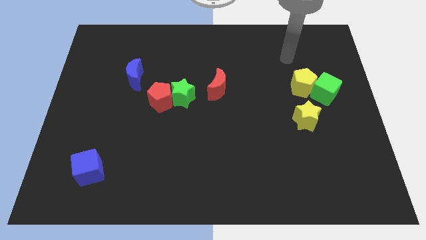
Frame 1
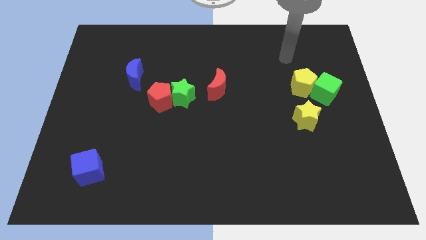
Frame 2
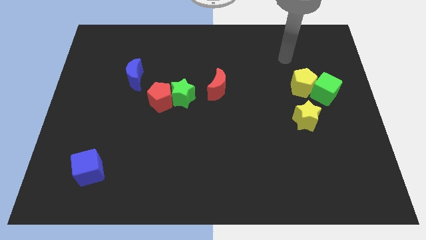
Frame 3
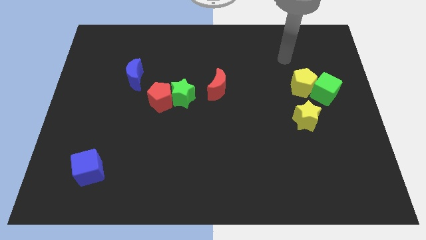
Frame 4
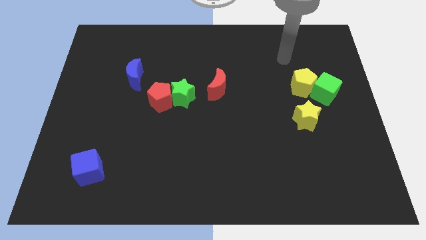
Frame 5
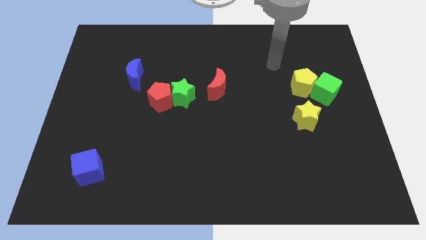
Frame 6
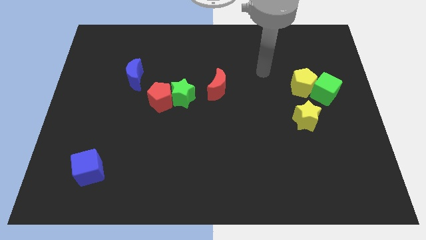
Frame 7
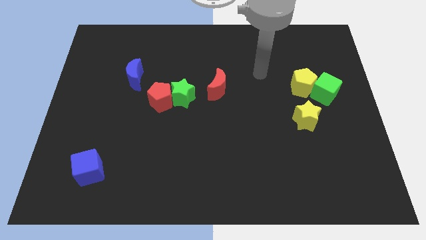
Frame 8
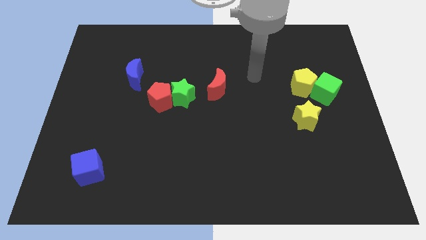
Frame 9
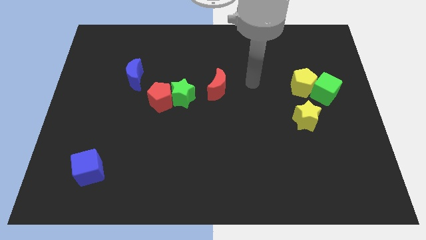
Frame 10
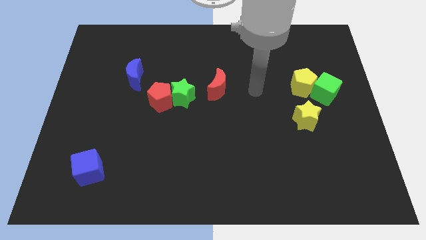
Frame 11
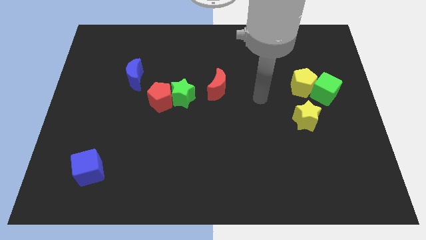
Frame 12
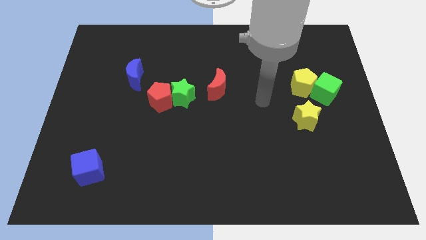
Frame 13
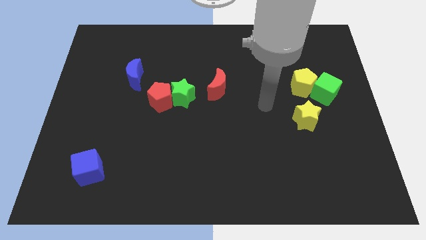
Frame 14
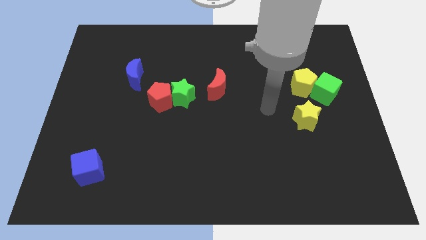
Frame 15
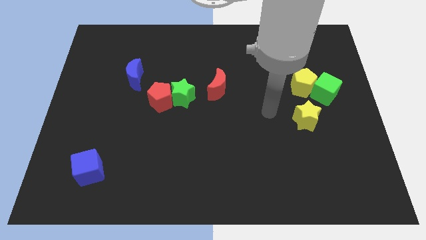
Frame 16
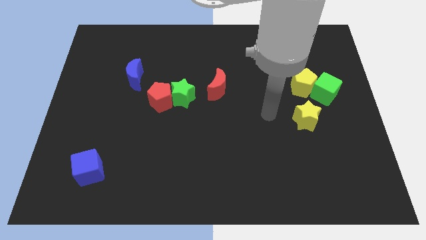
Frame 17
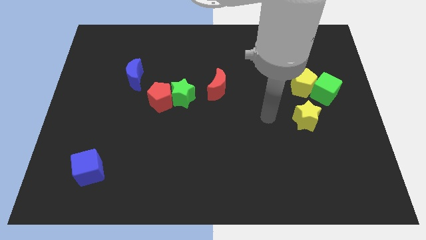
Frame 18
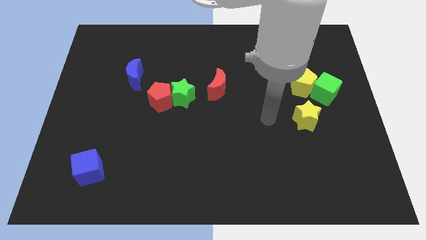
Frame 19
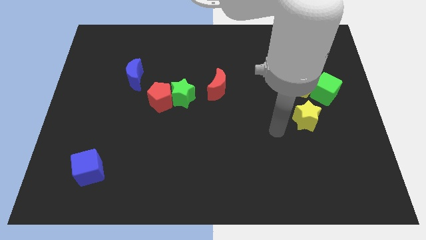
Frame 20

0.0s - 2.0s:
put your arm to the left side of yellow star

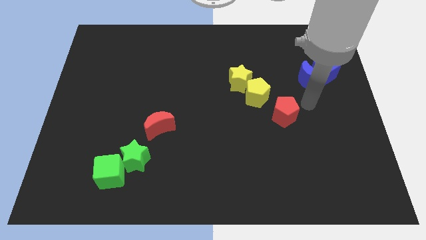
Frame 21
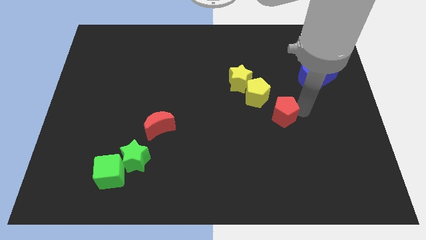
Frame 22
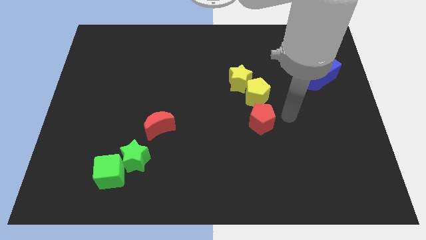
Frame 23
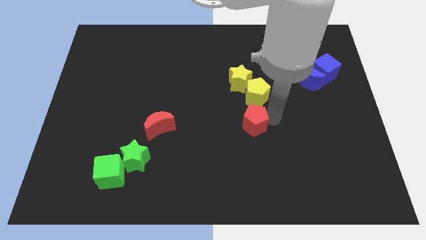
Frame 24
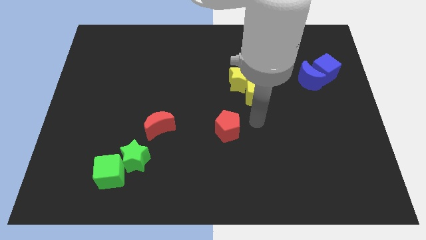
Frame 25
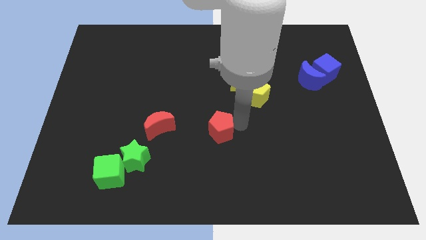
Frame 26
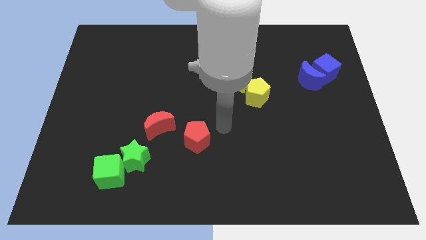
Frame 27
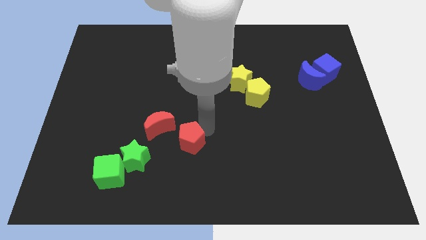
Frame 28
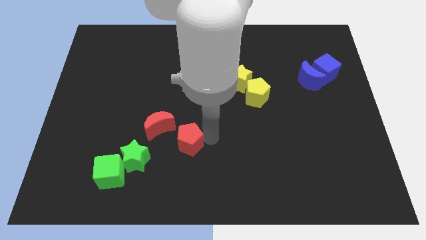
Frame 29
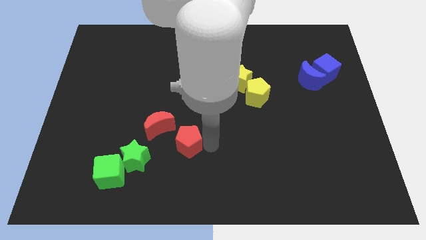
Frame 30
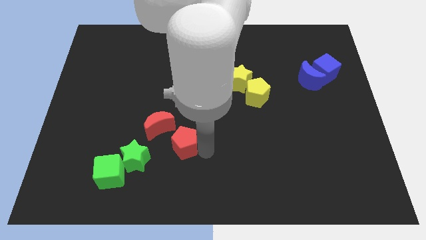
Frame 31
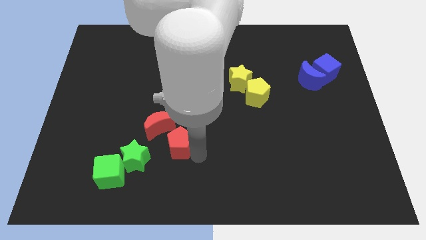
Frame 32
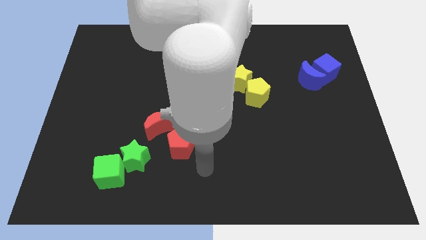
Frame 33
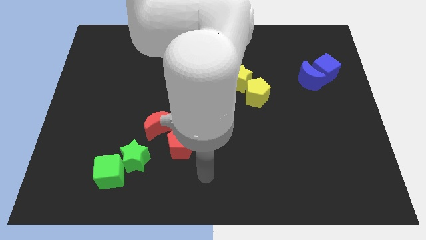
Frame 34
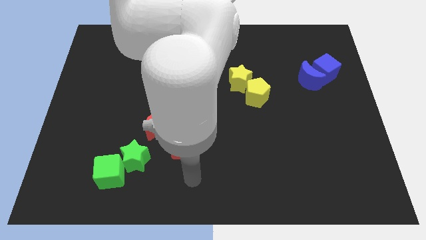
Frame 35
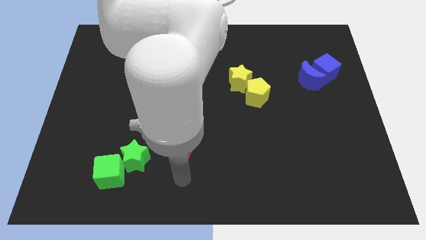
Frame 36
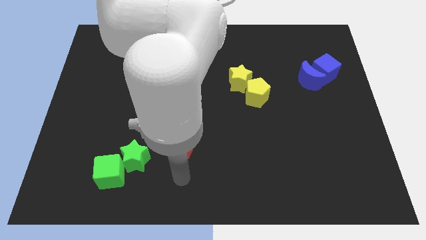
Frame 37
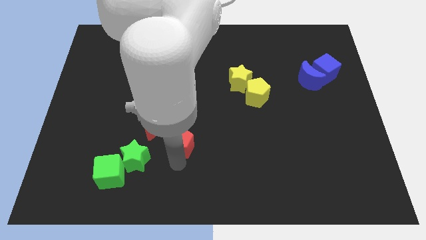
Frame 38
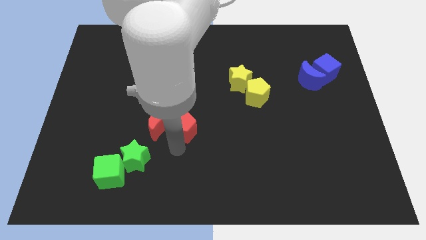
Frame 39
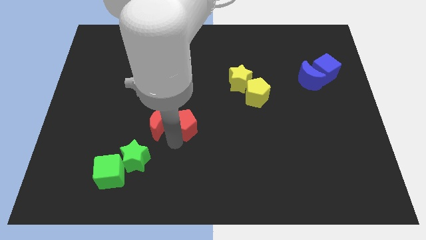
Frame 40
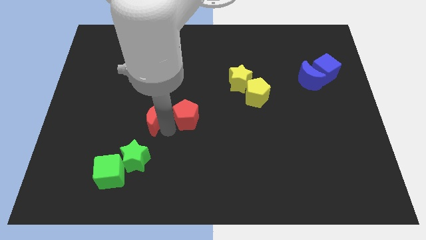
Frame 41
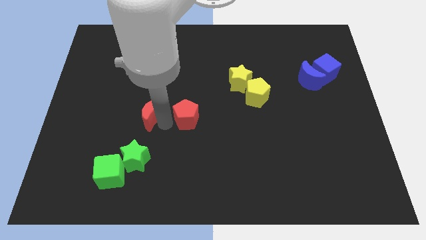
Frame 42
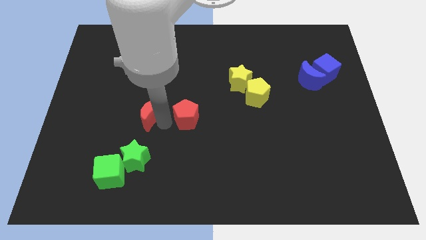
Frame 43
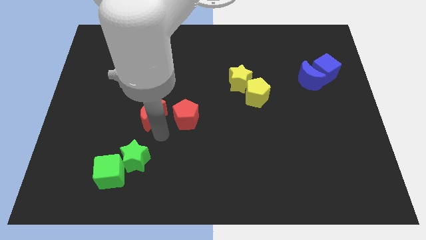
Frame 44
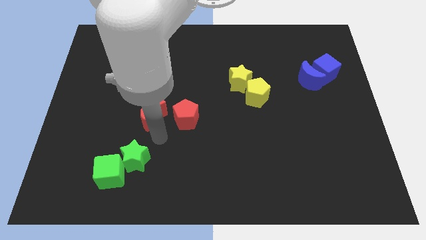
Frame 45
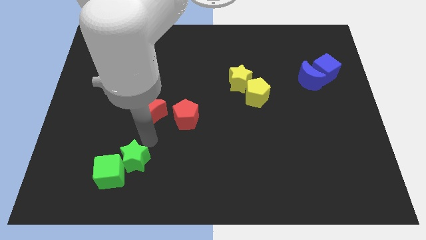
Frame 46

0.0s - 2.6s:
push the red pentagon to the right of the red crescent

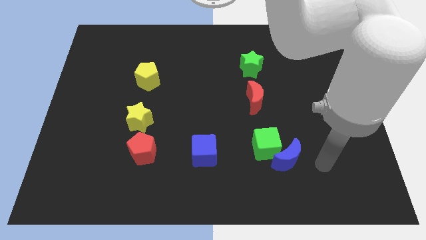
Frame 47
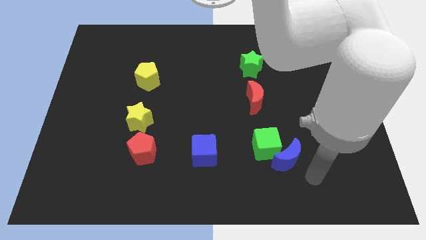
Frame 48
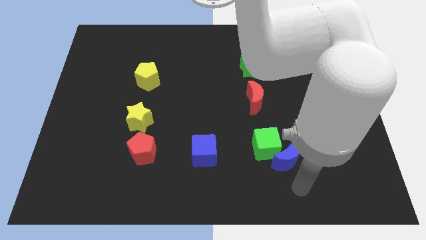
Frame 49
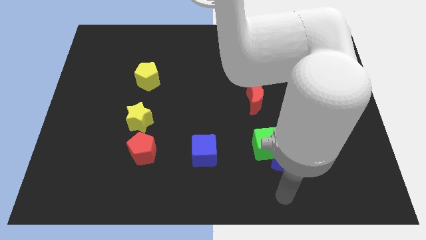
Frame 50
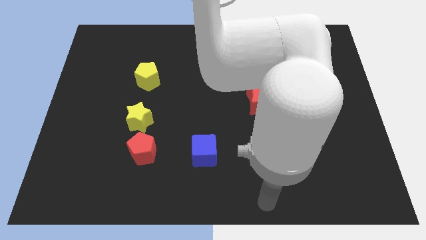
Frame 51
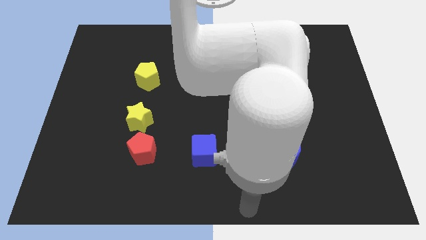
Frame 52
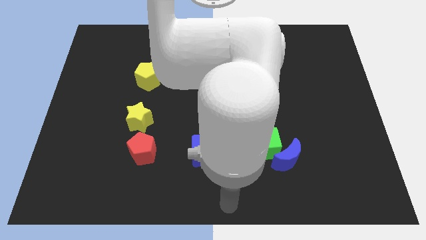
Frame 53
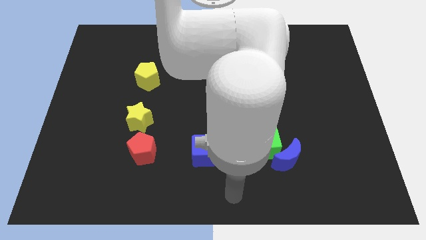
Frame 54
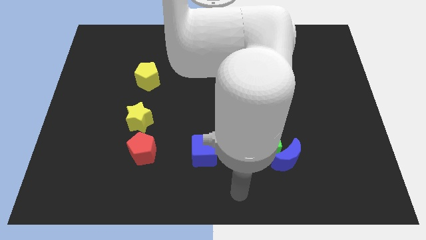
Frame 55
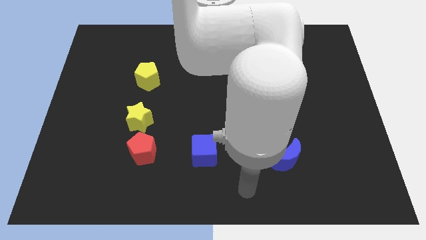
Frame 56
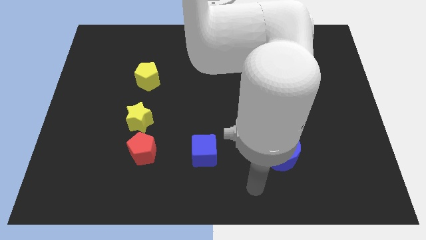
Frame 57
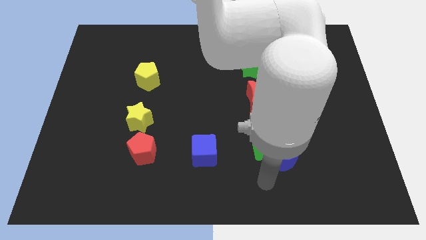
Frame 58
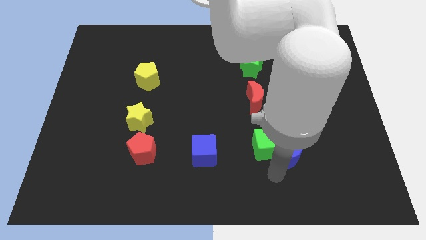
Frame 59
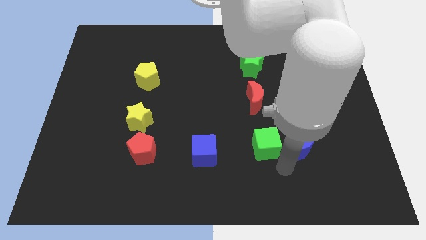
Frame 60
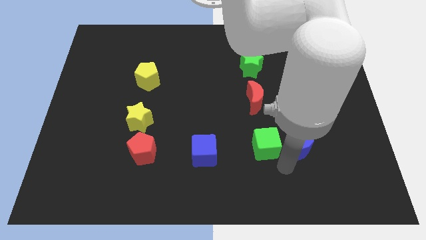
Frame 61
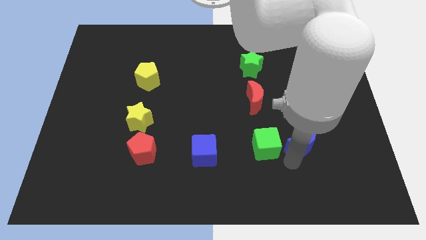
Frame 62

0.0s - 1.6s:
place your arm at the bottom of blue moon

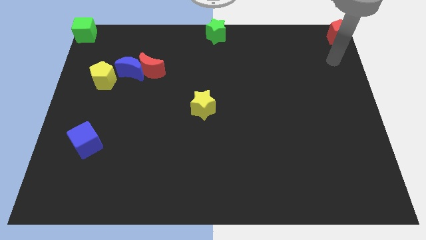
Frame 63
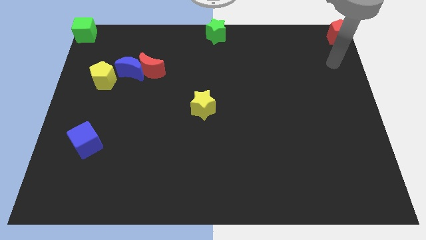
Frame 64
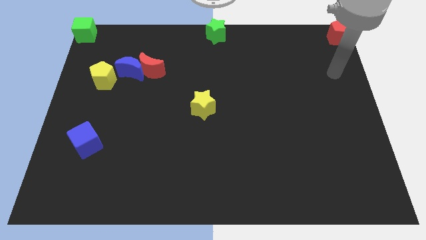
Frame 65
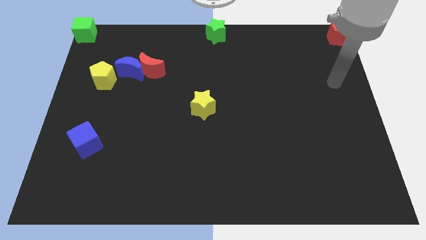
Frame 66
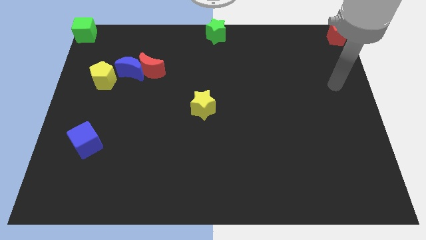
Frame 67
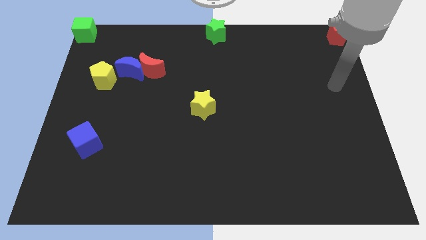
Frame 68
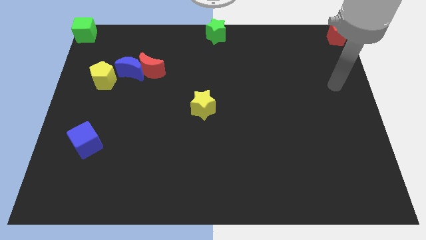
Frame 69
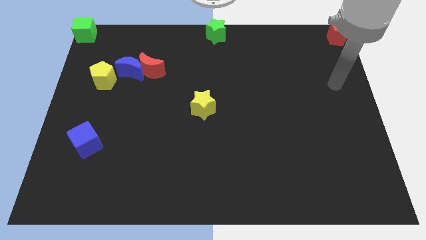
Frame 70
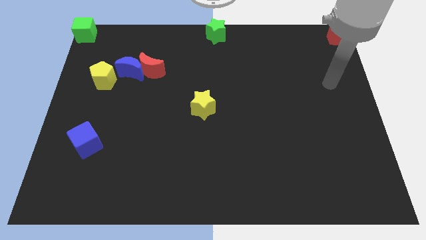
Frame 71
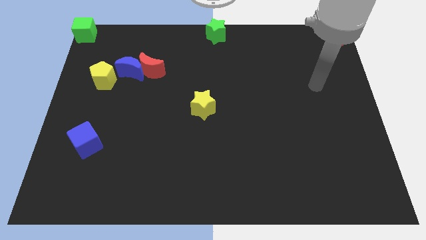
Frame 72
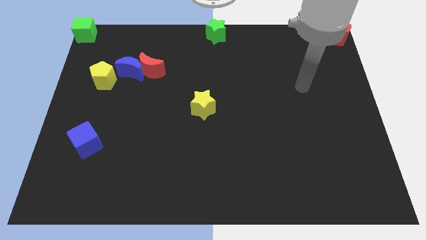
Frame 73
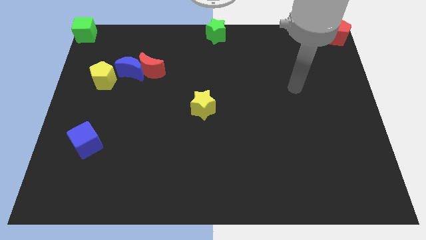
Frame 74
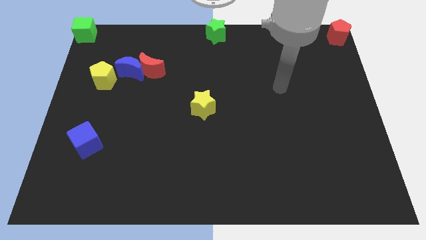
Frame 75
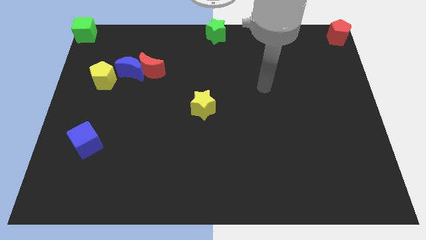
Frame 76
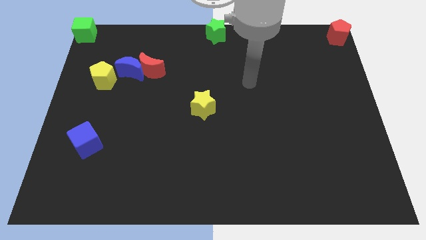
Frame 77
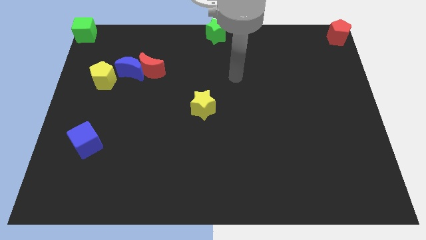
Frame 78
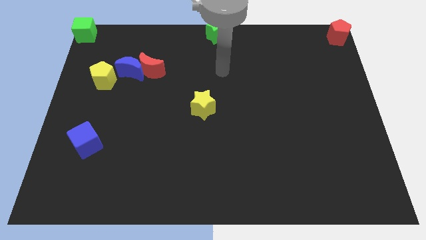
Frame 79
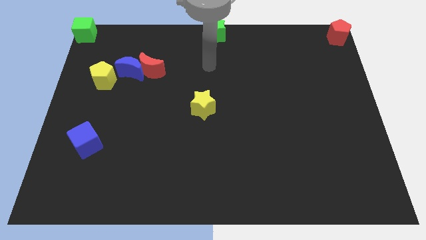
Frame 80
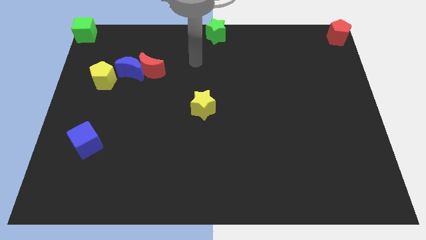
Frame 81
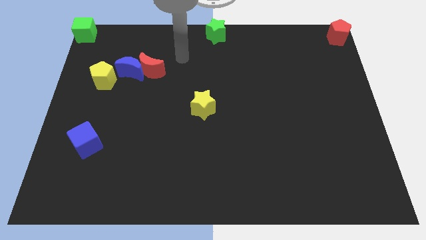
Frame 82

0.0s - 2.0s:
move your arm away from the red pentagon

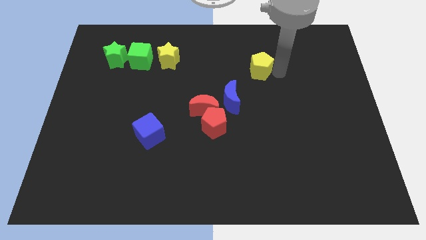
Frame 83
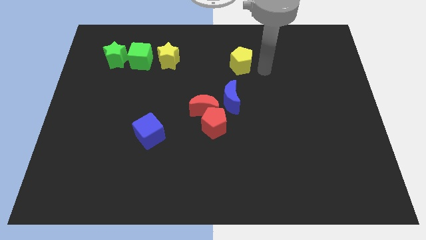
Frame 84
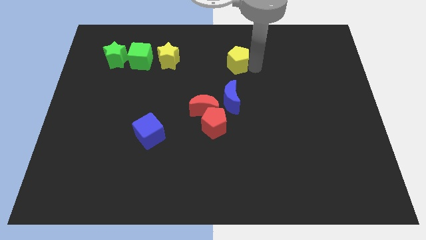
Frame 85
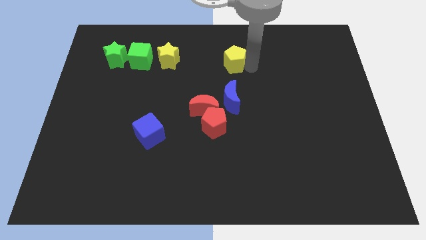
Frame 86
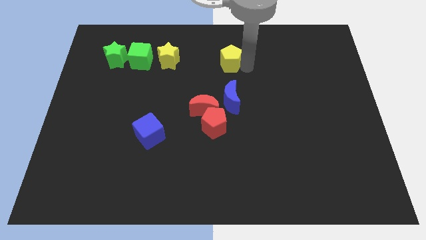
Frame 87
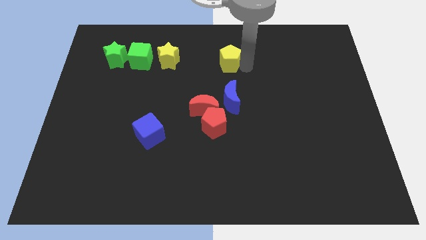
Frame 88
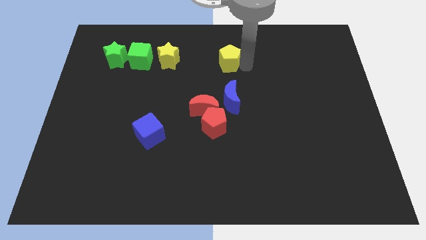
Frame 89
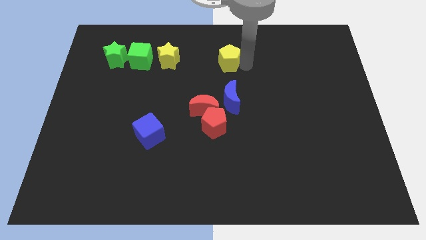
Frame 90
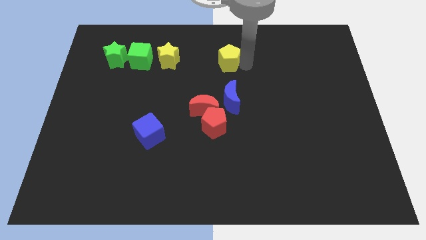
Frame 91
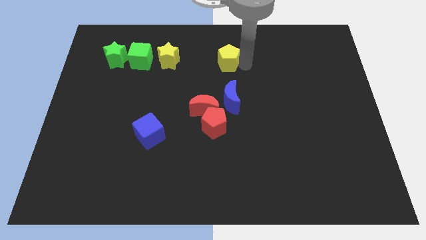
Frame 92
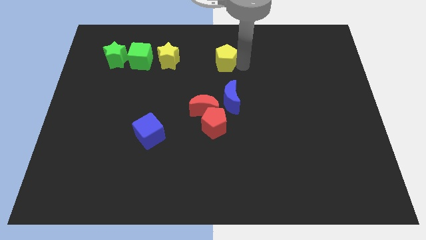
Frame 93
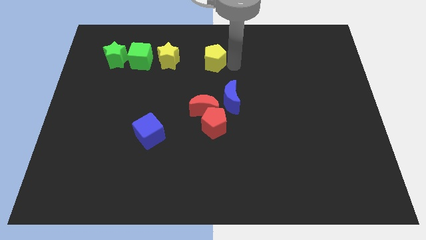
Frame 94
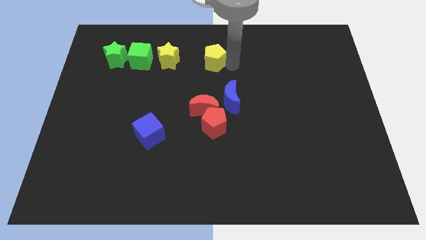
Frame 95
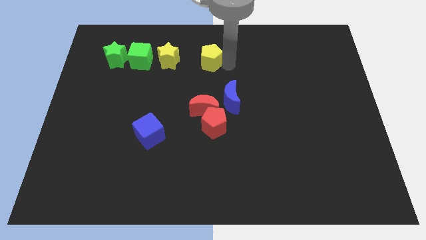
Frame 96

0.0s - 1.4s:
push the yellow pentagon towards the yellow star
